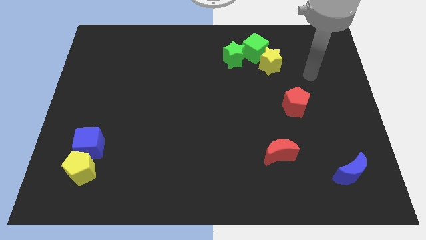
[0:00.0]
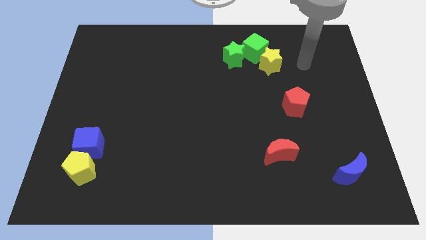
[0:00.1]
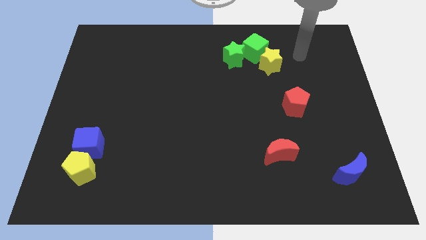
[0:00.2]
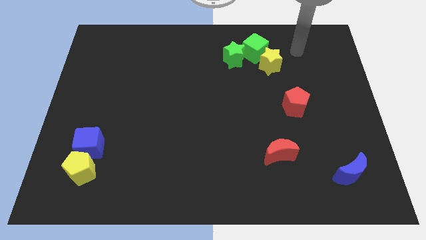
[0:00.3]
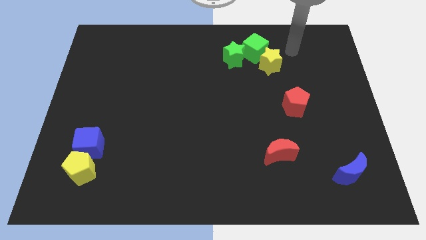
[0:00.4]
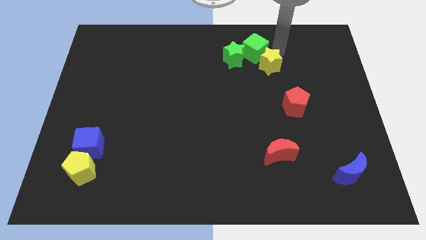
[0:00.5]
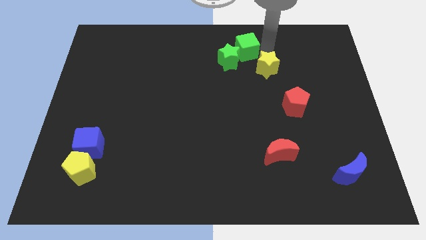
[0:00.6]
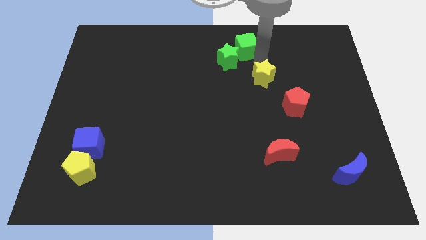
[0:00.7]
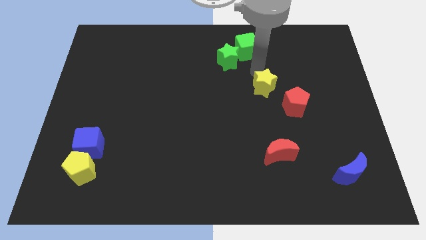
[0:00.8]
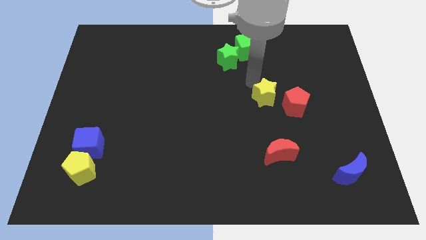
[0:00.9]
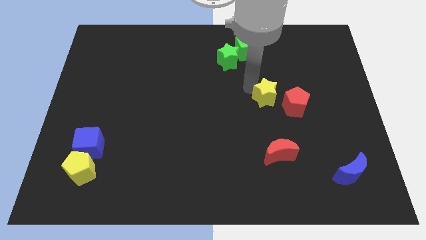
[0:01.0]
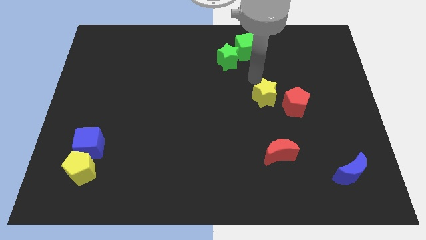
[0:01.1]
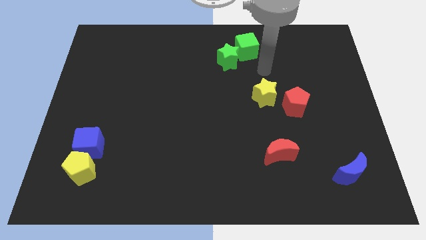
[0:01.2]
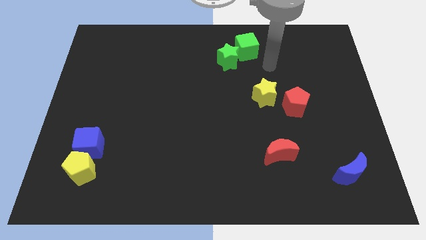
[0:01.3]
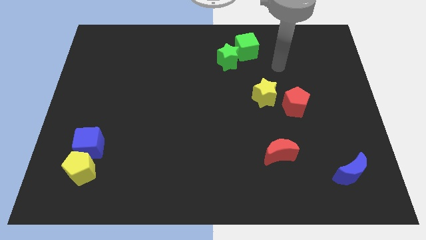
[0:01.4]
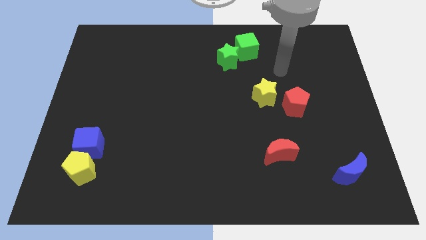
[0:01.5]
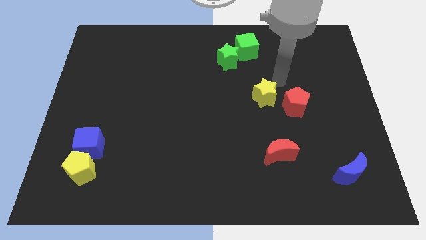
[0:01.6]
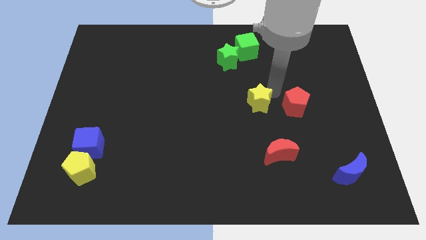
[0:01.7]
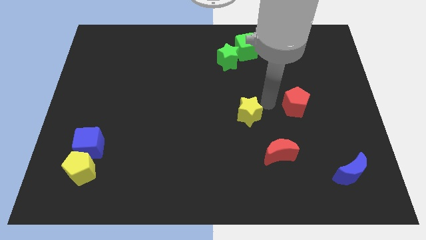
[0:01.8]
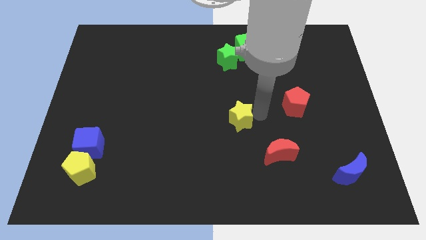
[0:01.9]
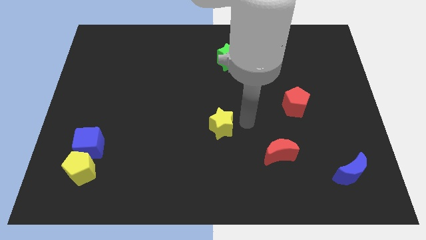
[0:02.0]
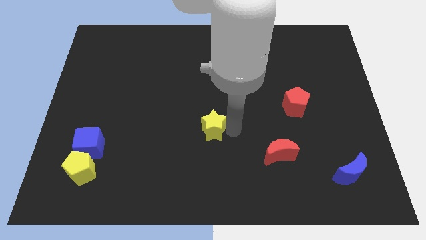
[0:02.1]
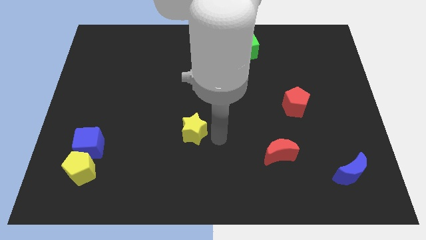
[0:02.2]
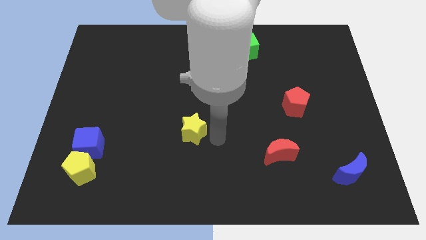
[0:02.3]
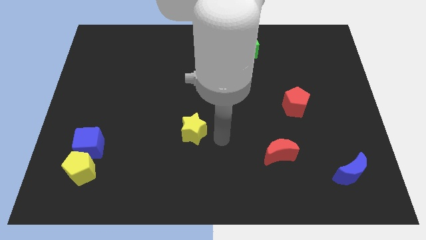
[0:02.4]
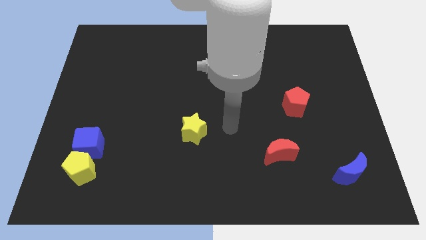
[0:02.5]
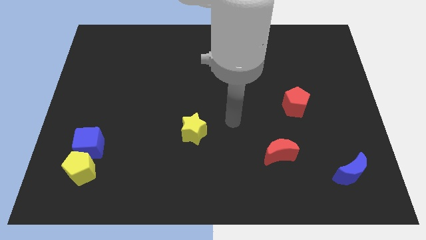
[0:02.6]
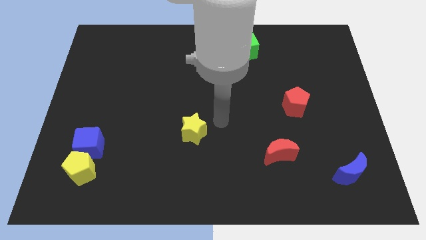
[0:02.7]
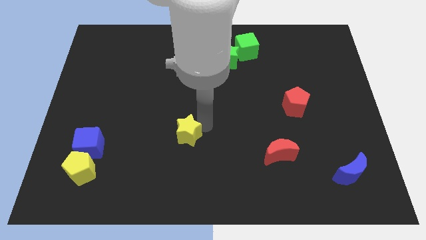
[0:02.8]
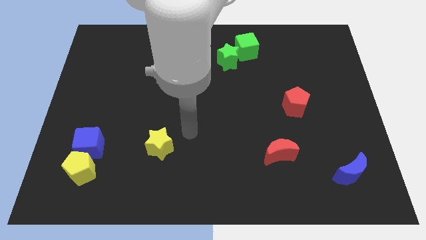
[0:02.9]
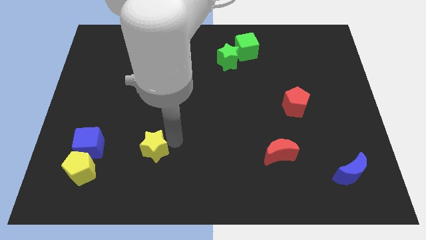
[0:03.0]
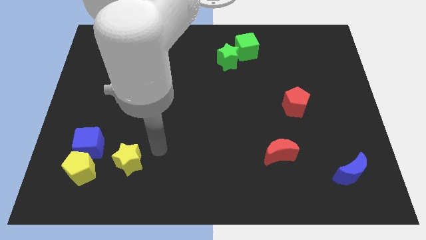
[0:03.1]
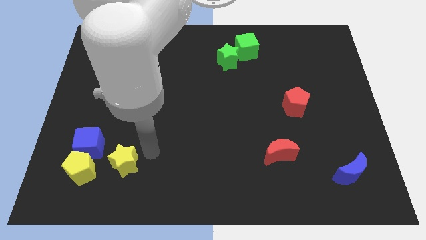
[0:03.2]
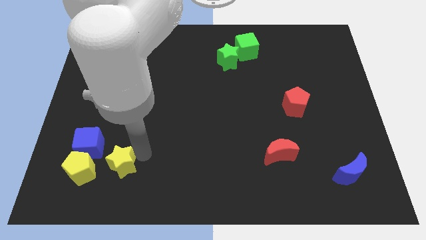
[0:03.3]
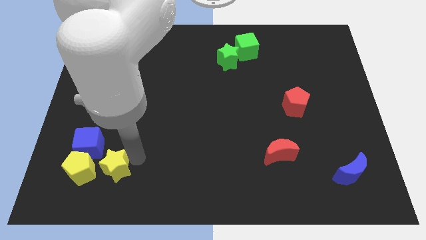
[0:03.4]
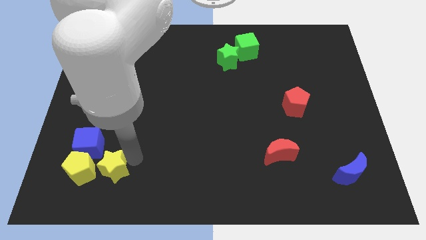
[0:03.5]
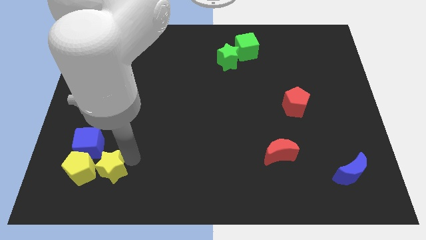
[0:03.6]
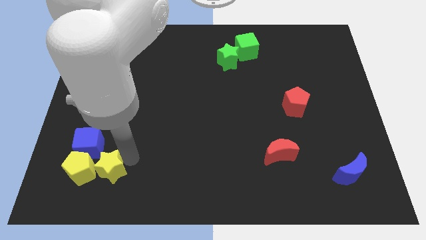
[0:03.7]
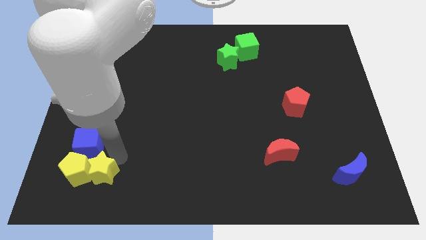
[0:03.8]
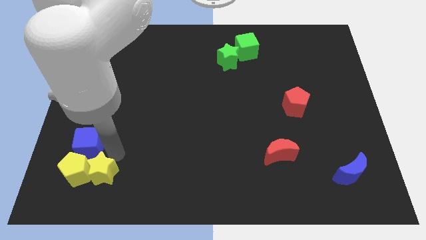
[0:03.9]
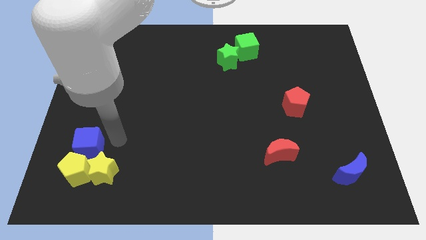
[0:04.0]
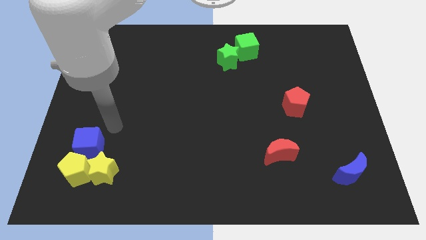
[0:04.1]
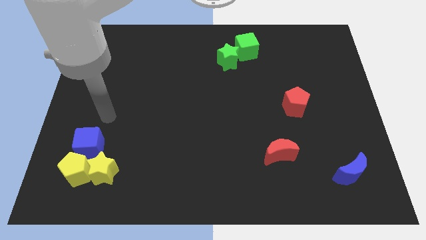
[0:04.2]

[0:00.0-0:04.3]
push the yellow star to the right of the yellow pentagon

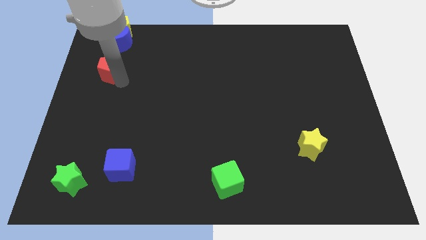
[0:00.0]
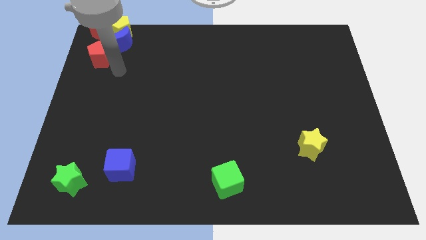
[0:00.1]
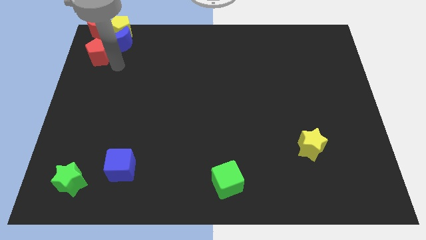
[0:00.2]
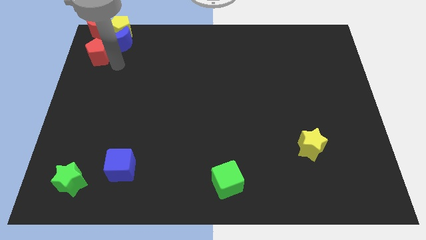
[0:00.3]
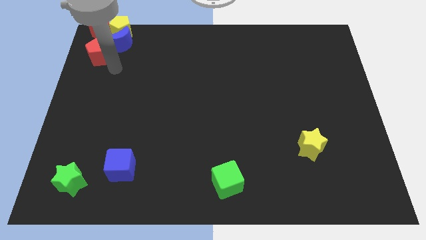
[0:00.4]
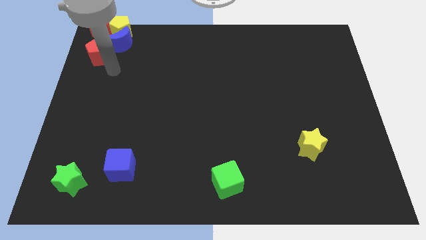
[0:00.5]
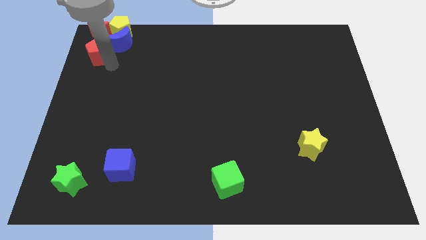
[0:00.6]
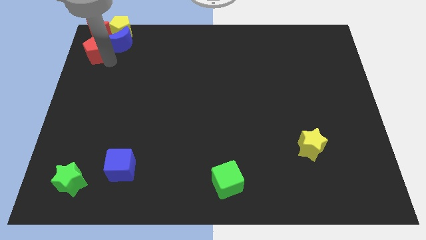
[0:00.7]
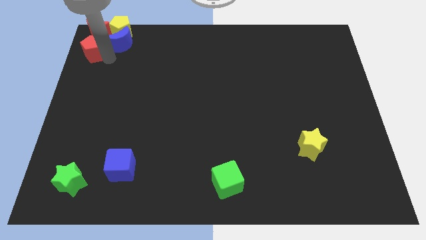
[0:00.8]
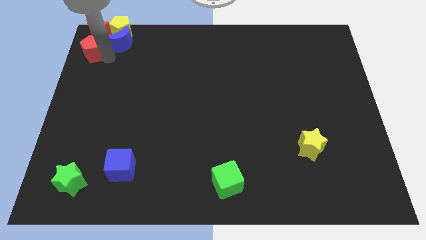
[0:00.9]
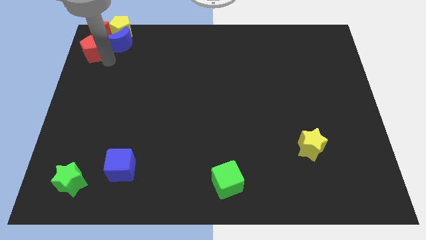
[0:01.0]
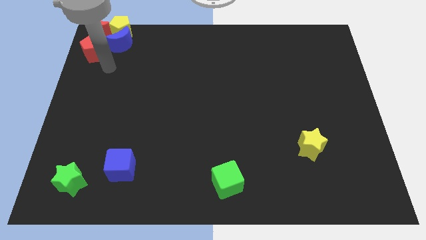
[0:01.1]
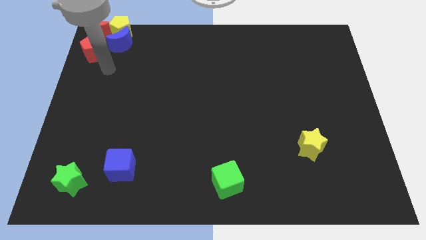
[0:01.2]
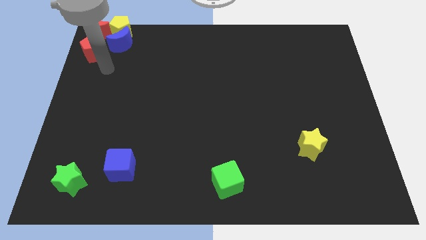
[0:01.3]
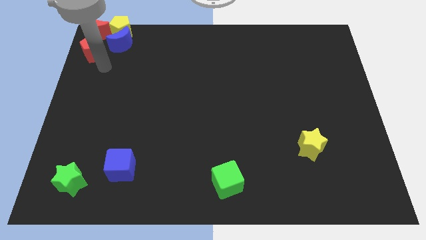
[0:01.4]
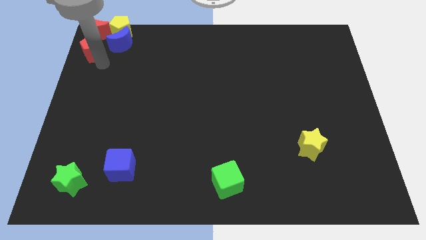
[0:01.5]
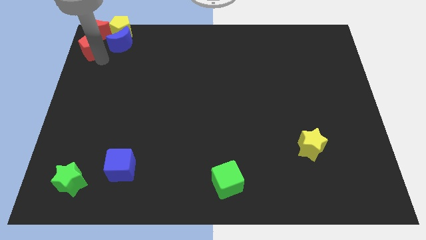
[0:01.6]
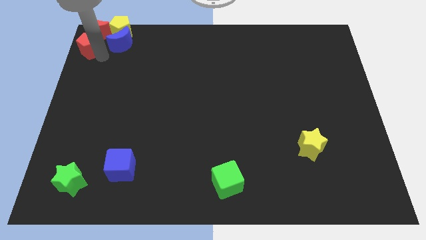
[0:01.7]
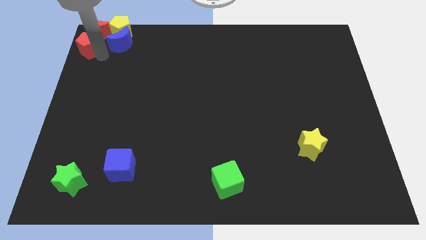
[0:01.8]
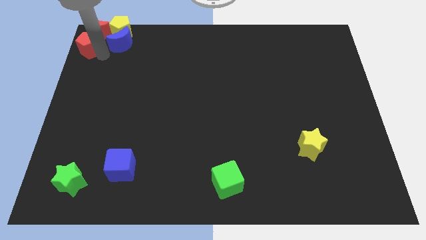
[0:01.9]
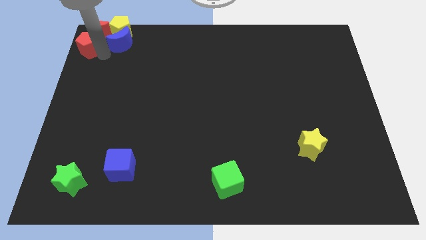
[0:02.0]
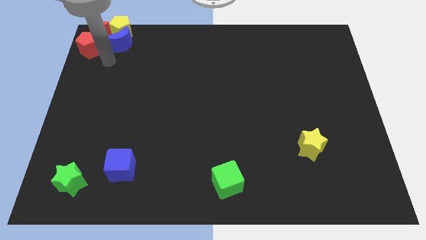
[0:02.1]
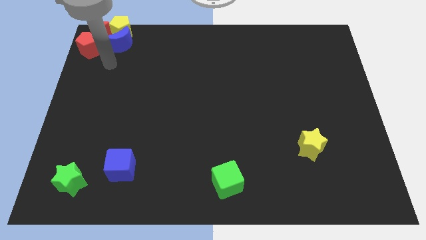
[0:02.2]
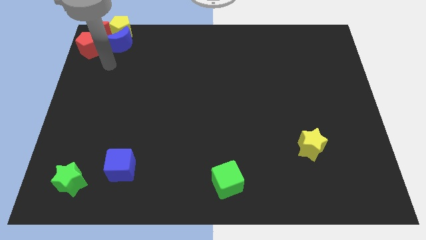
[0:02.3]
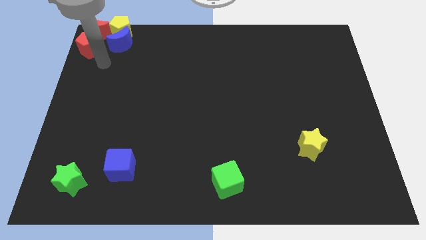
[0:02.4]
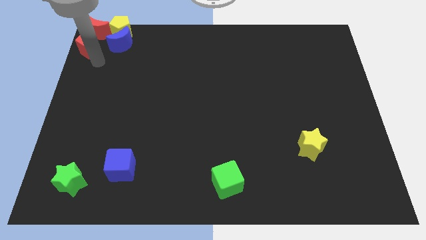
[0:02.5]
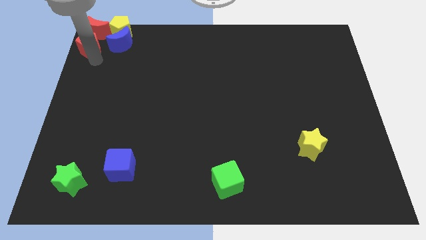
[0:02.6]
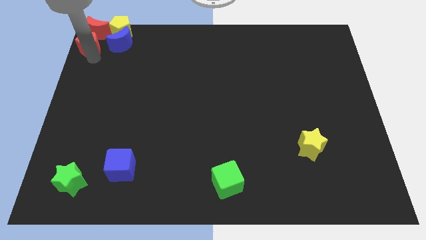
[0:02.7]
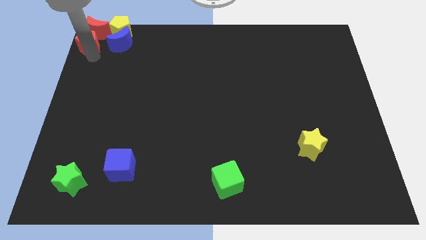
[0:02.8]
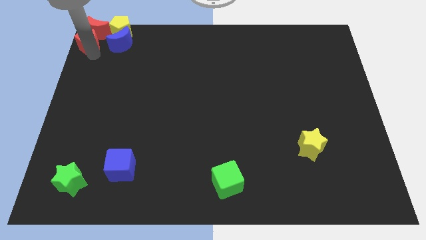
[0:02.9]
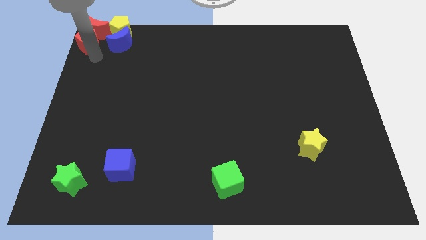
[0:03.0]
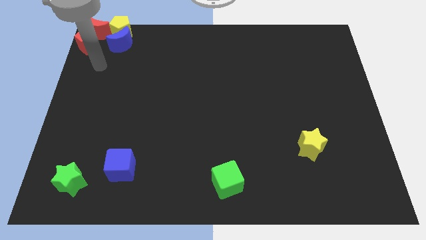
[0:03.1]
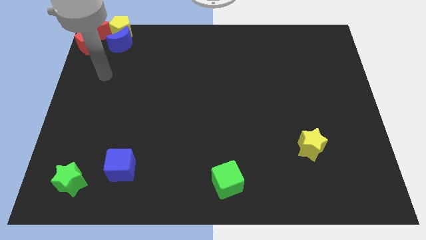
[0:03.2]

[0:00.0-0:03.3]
move the red pentagon to the bottom left side of the red crescent

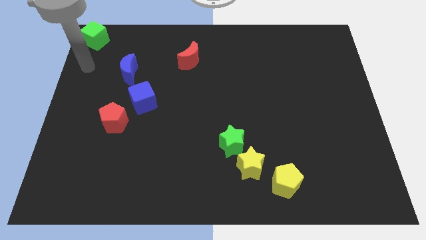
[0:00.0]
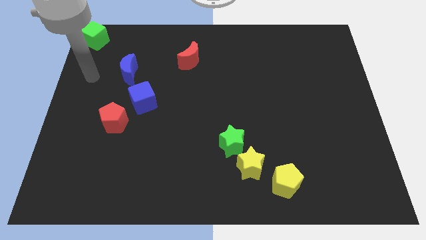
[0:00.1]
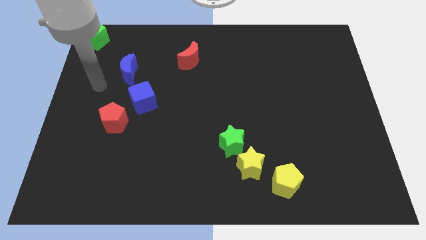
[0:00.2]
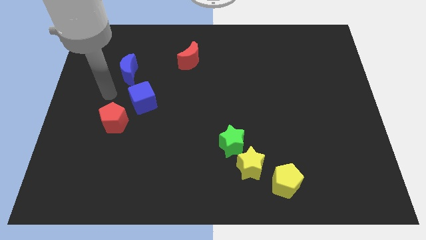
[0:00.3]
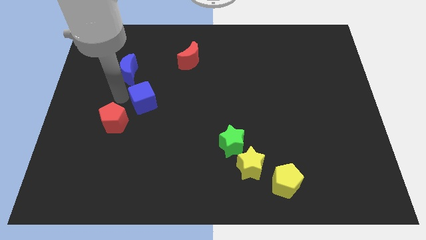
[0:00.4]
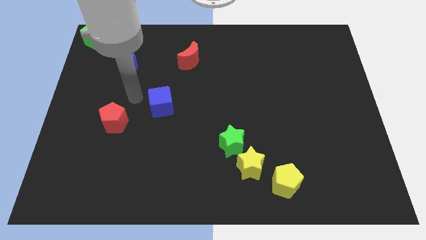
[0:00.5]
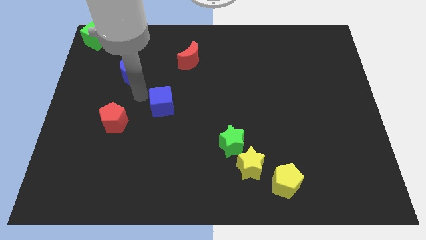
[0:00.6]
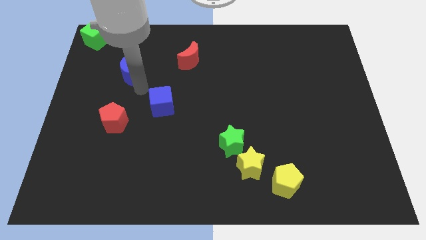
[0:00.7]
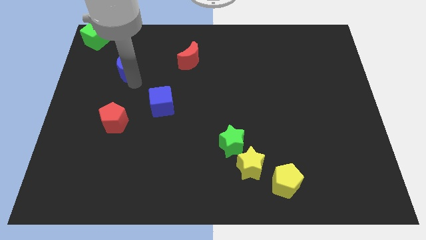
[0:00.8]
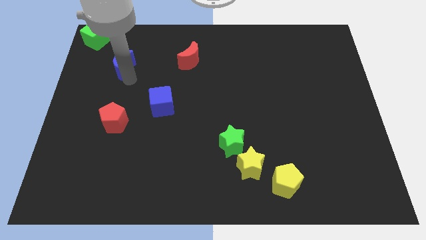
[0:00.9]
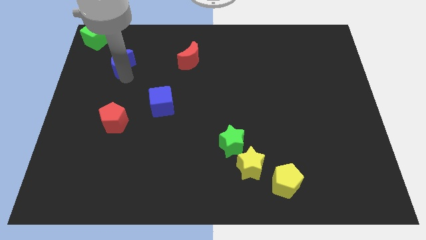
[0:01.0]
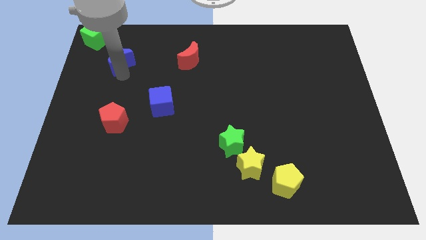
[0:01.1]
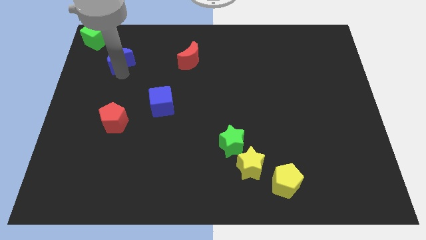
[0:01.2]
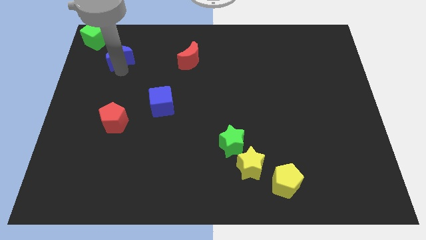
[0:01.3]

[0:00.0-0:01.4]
separate the blue crescent from the blue cube

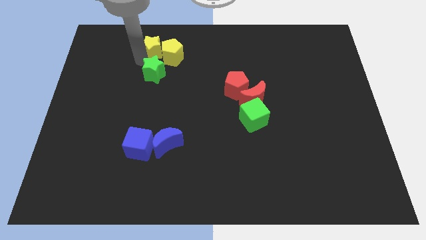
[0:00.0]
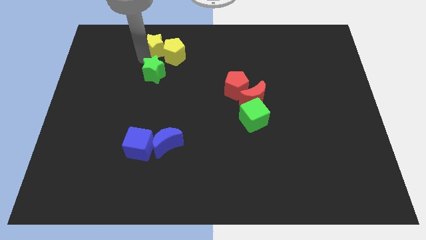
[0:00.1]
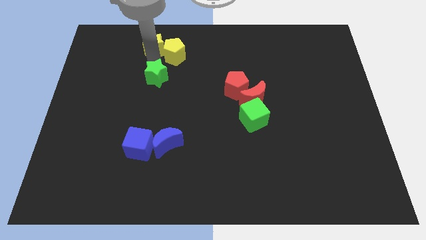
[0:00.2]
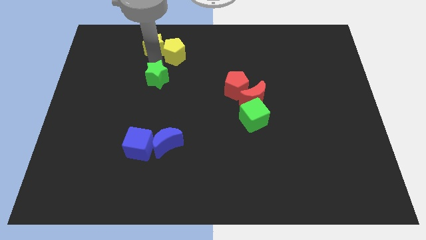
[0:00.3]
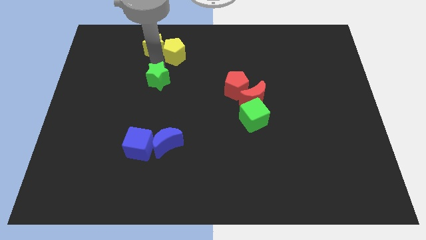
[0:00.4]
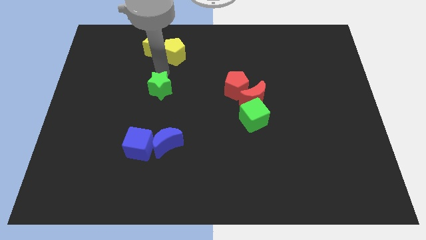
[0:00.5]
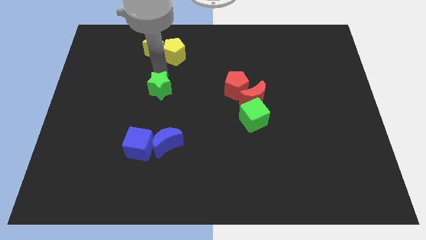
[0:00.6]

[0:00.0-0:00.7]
separate the green star from the yellow blocks
